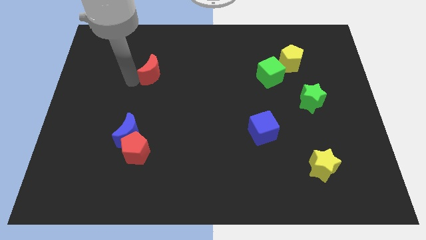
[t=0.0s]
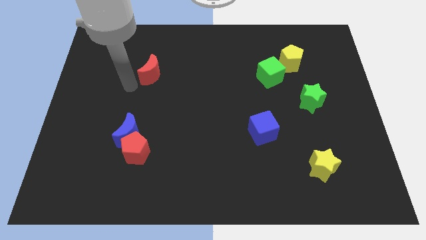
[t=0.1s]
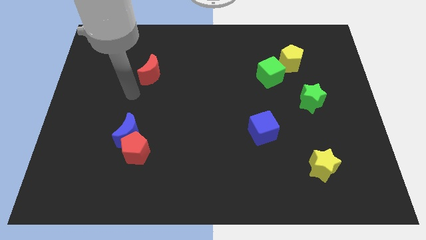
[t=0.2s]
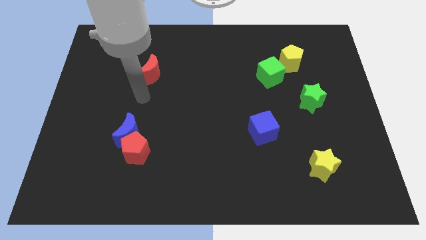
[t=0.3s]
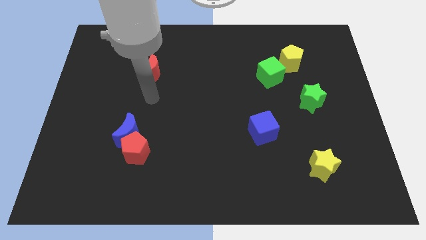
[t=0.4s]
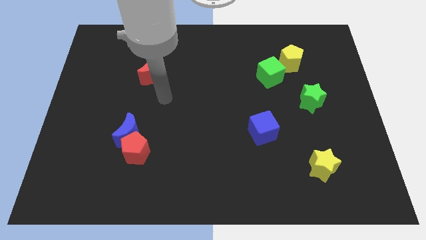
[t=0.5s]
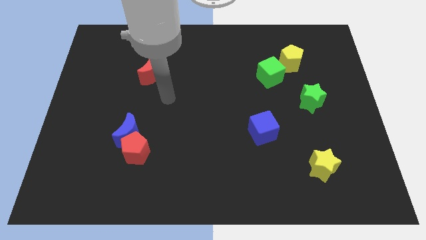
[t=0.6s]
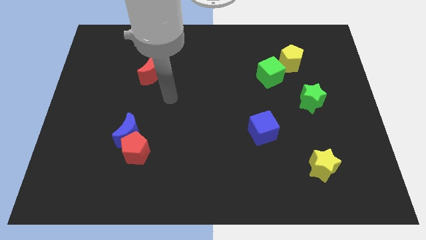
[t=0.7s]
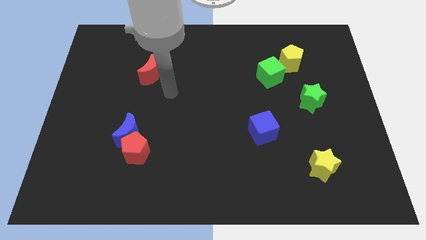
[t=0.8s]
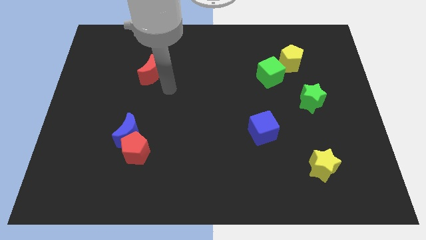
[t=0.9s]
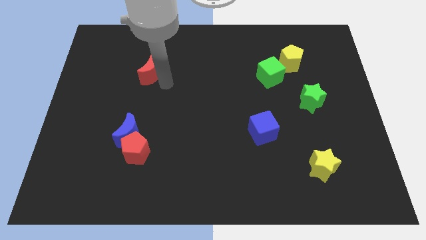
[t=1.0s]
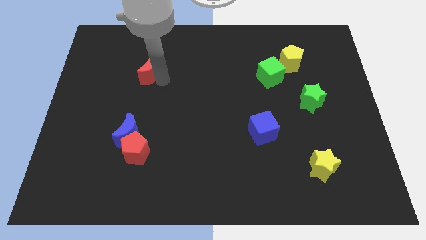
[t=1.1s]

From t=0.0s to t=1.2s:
touch red moon with your arm

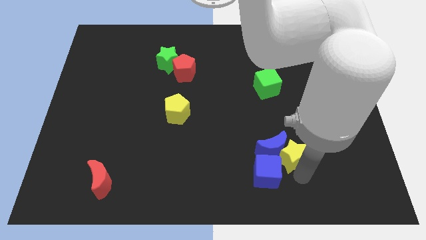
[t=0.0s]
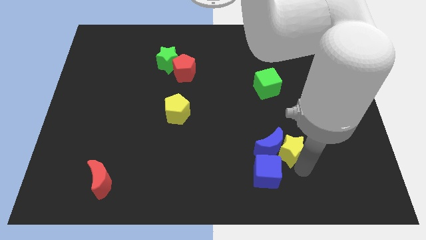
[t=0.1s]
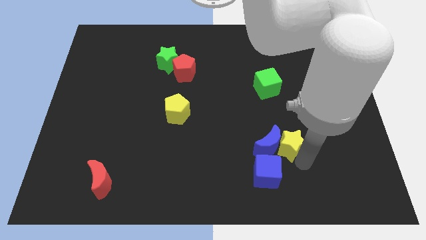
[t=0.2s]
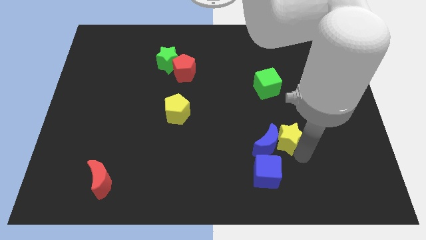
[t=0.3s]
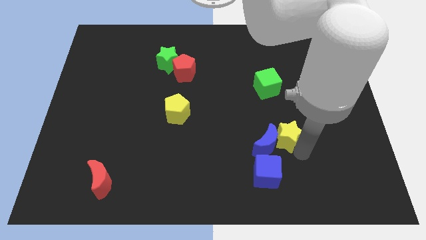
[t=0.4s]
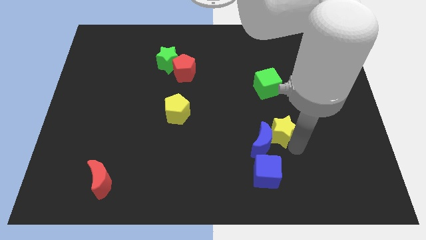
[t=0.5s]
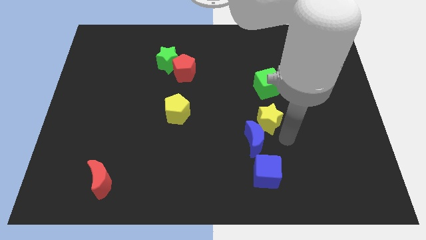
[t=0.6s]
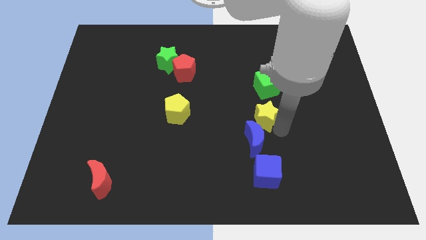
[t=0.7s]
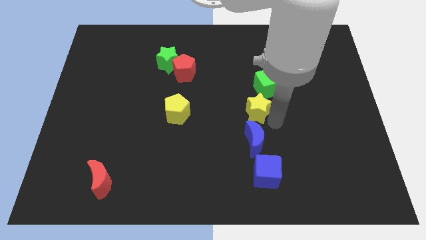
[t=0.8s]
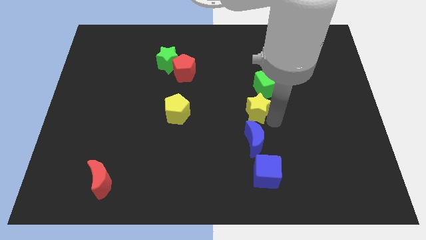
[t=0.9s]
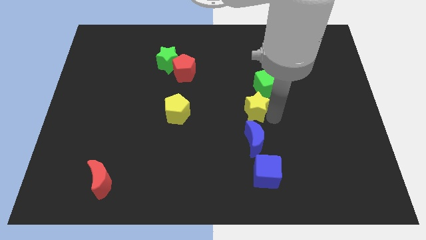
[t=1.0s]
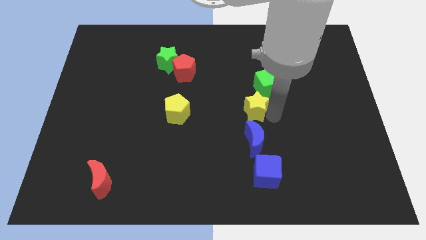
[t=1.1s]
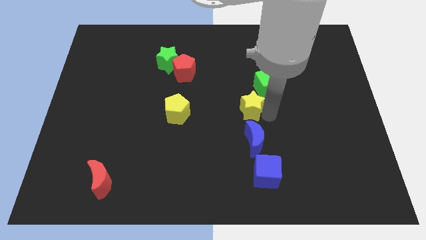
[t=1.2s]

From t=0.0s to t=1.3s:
place the yellow star diagonal to the green cube

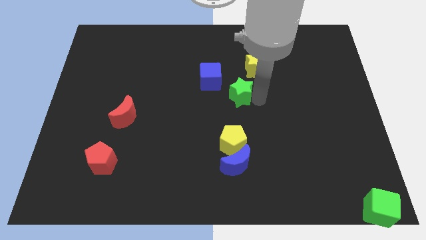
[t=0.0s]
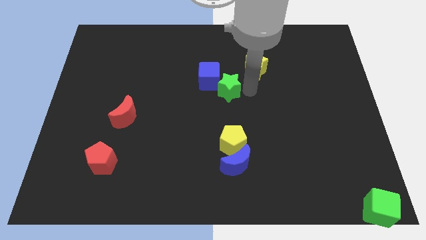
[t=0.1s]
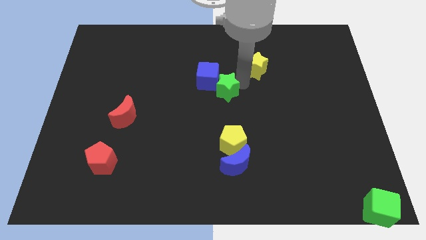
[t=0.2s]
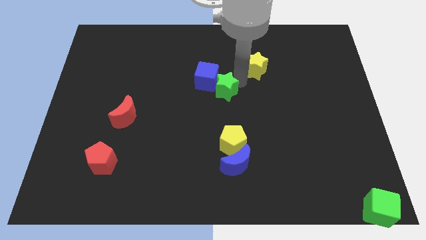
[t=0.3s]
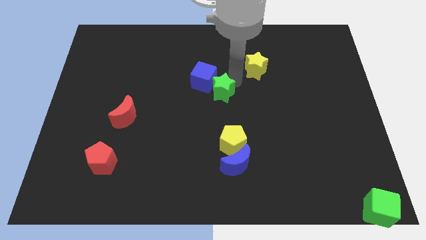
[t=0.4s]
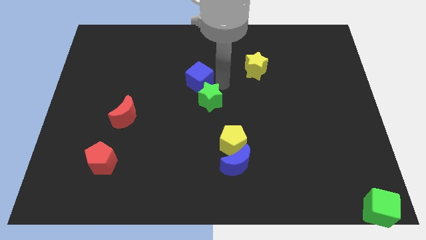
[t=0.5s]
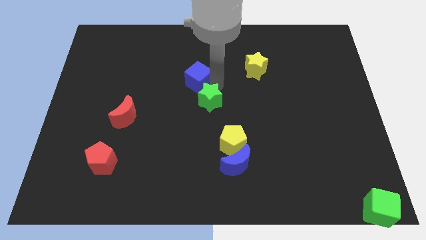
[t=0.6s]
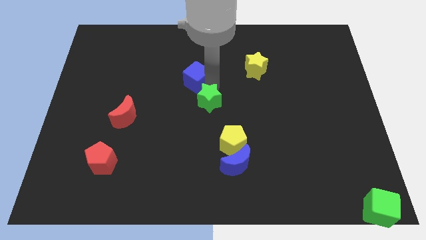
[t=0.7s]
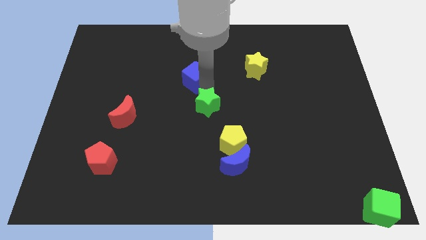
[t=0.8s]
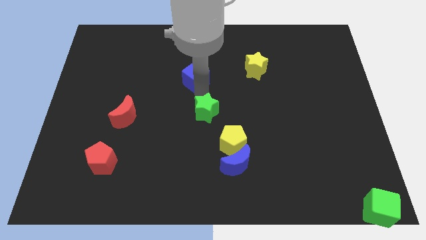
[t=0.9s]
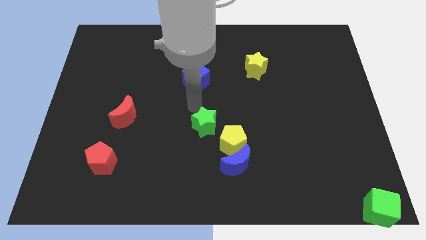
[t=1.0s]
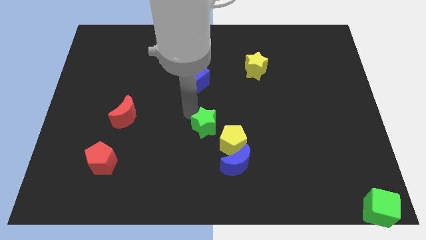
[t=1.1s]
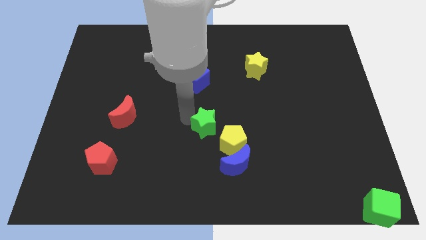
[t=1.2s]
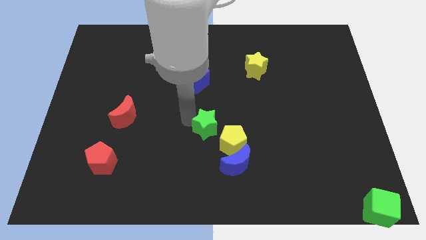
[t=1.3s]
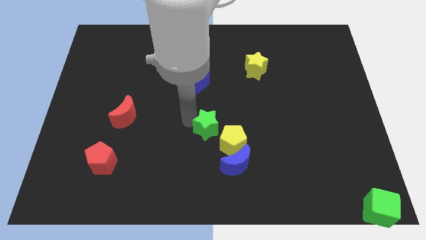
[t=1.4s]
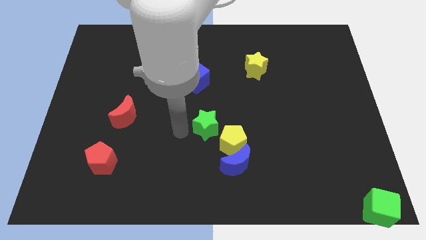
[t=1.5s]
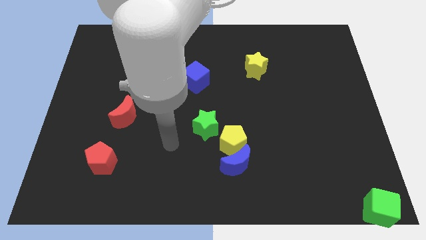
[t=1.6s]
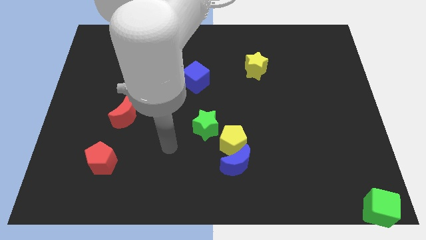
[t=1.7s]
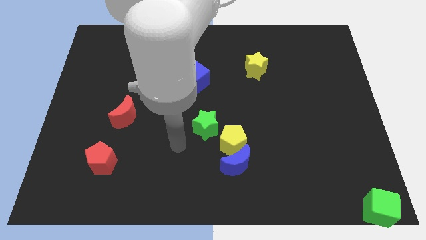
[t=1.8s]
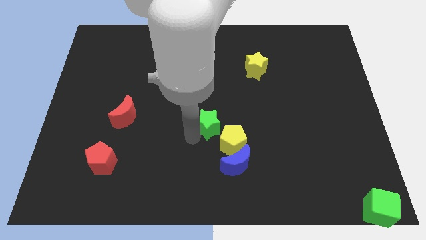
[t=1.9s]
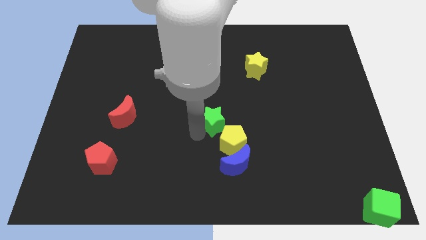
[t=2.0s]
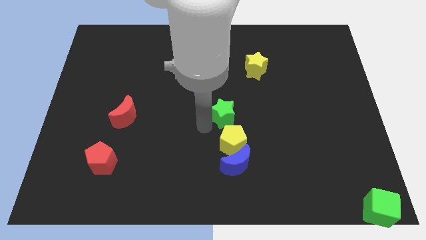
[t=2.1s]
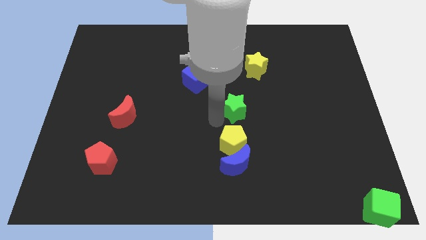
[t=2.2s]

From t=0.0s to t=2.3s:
move the green star above the yellow pentagon

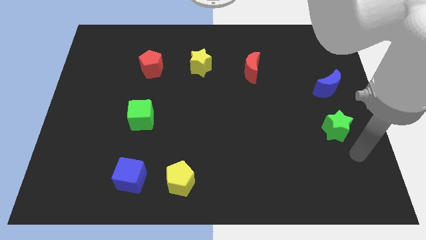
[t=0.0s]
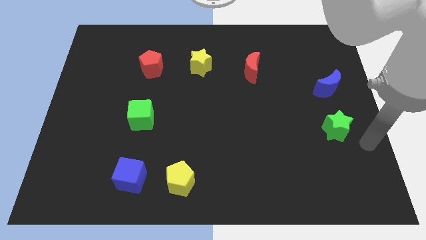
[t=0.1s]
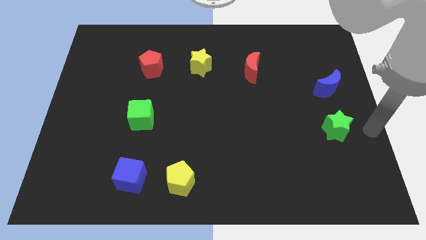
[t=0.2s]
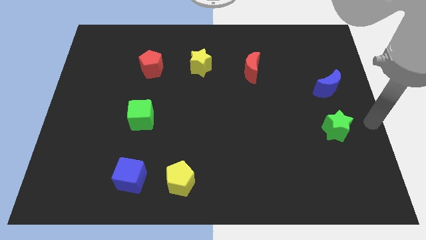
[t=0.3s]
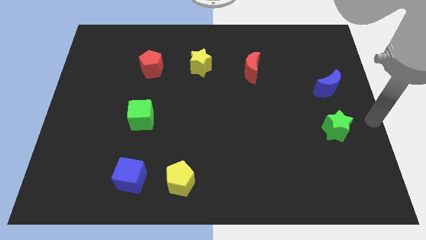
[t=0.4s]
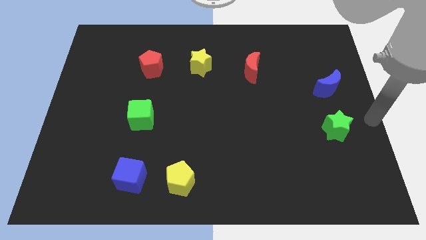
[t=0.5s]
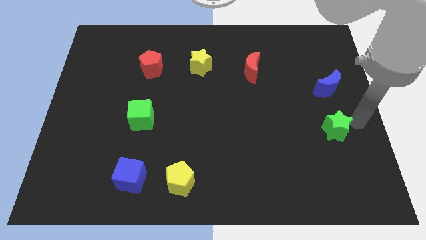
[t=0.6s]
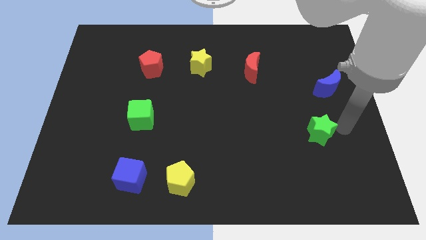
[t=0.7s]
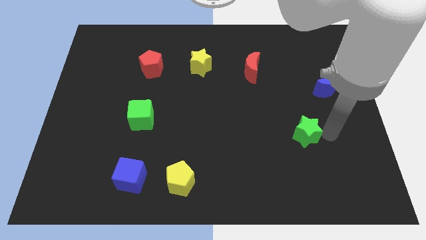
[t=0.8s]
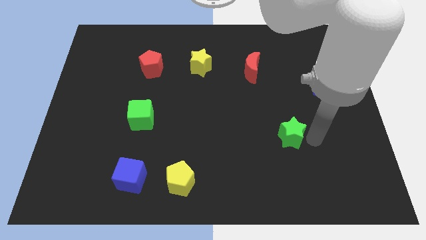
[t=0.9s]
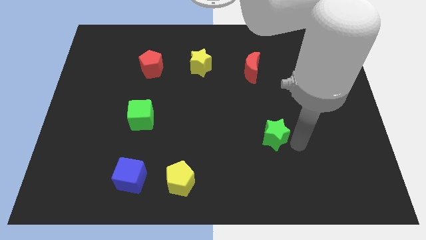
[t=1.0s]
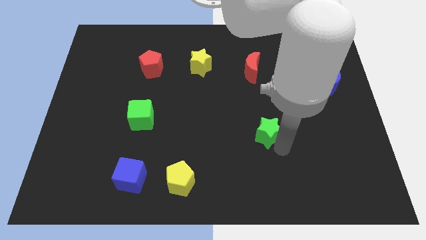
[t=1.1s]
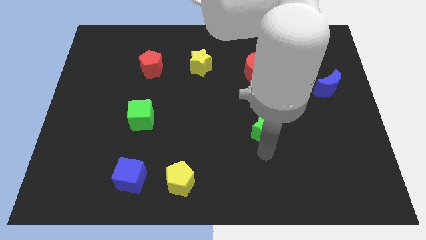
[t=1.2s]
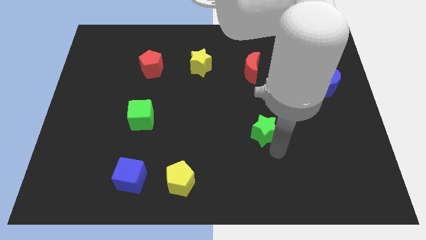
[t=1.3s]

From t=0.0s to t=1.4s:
put the green star vertically below the red moon

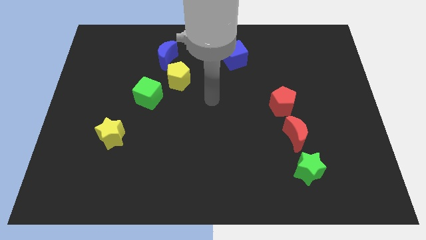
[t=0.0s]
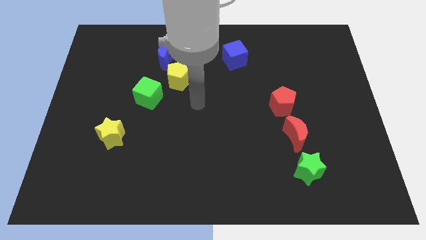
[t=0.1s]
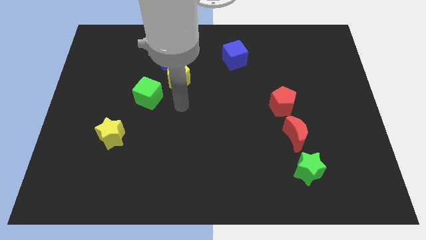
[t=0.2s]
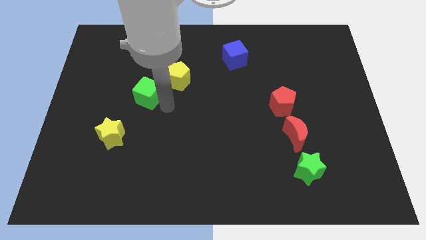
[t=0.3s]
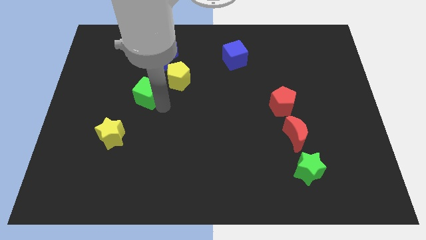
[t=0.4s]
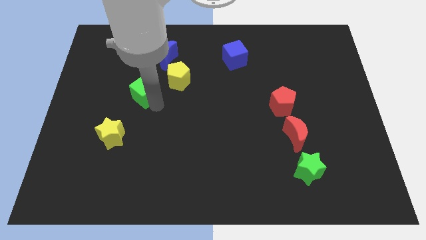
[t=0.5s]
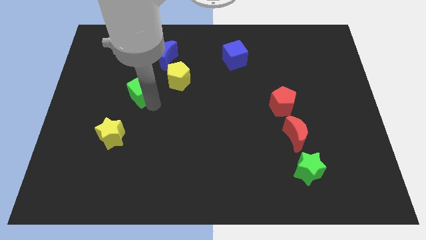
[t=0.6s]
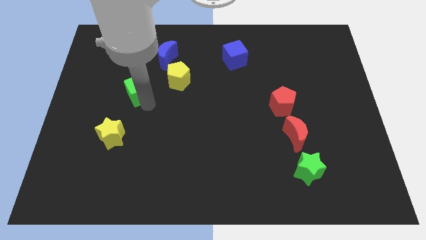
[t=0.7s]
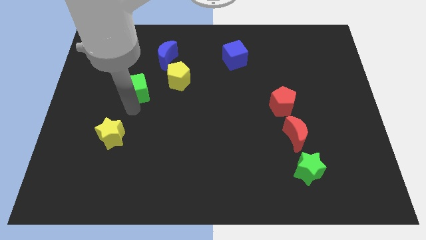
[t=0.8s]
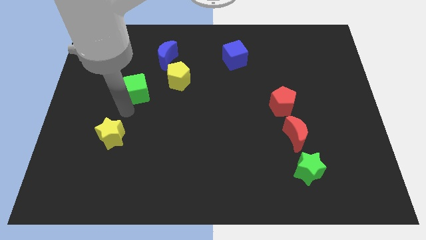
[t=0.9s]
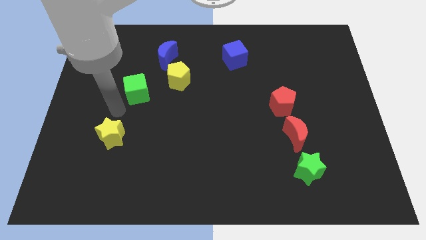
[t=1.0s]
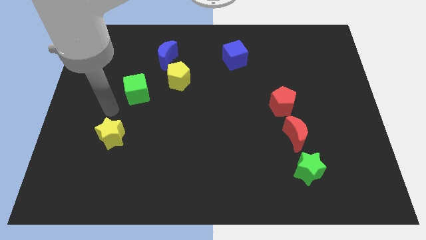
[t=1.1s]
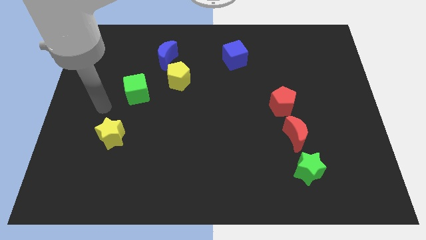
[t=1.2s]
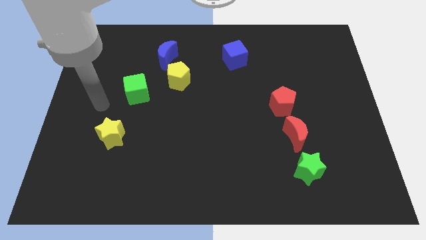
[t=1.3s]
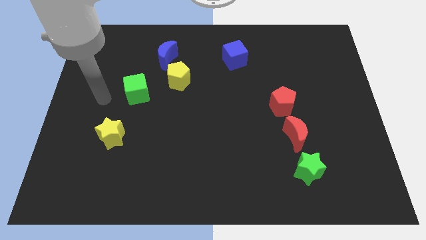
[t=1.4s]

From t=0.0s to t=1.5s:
slightly move the green cube to the top of the board

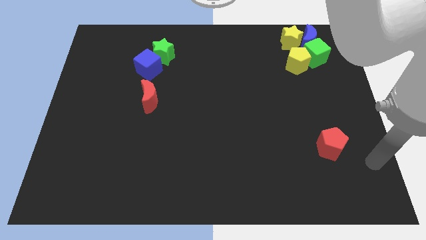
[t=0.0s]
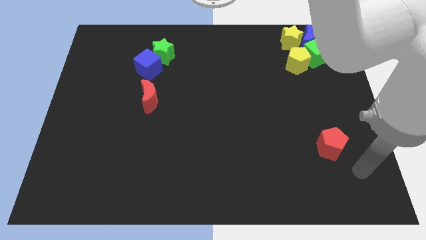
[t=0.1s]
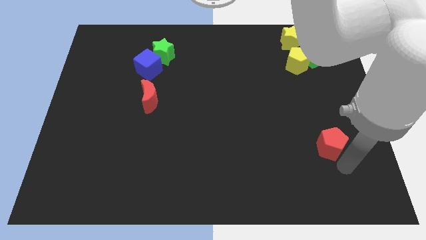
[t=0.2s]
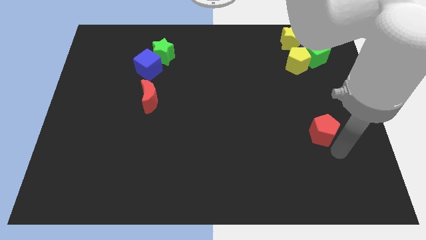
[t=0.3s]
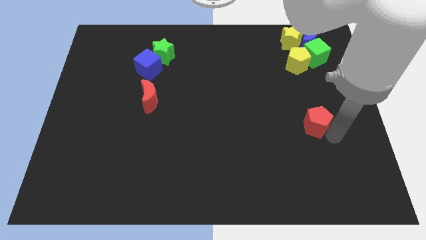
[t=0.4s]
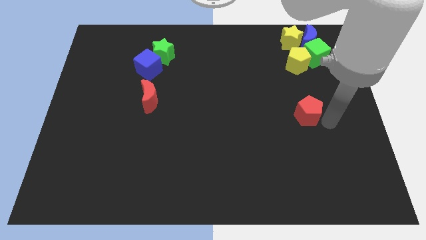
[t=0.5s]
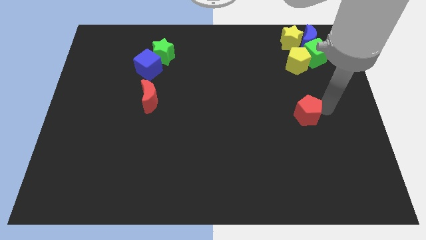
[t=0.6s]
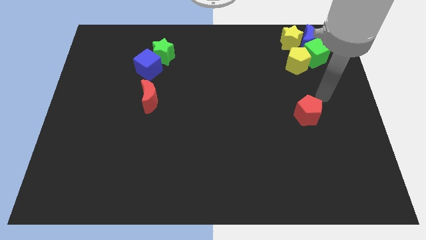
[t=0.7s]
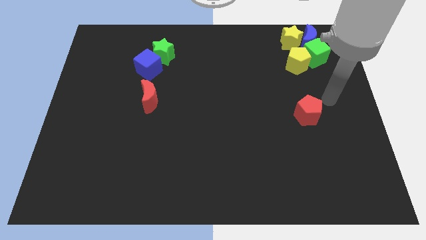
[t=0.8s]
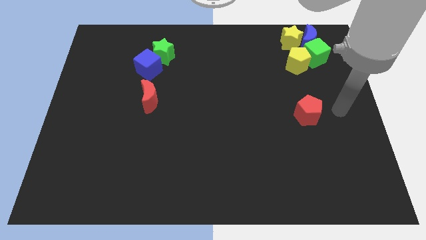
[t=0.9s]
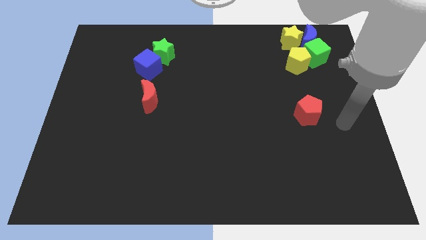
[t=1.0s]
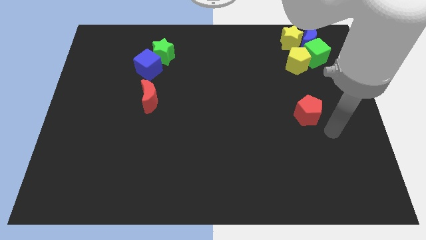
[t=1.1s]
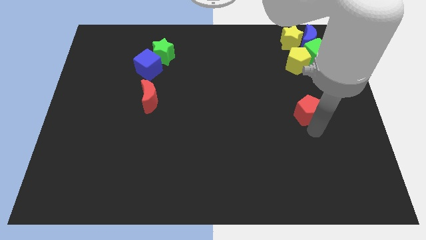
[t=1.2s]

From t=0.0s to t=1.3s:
place the red pentagon vertically below the yellow pentagon
